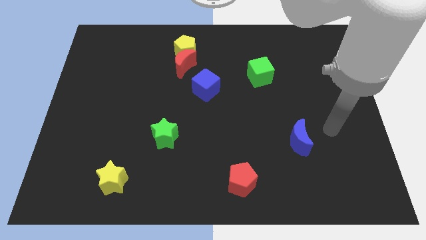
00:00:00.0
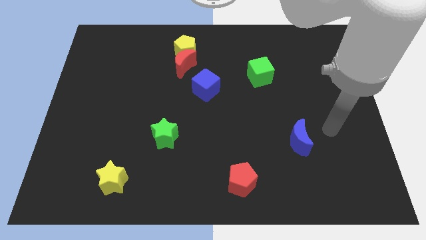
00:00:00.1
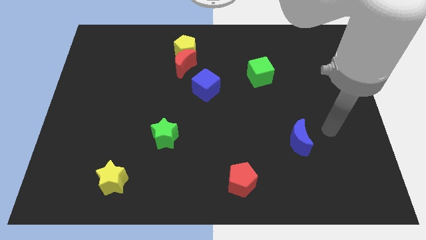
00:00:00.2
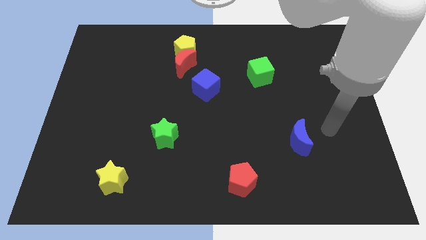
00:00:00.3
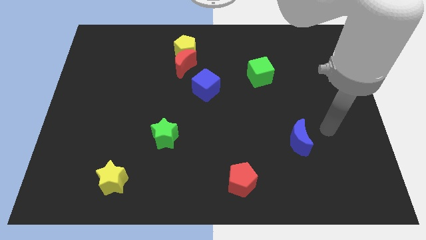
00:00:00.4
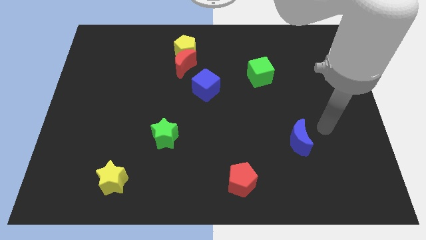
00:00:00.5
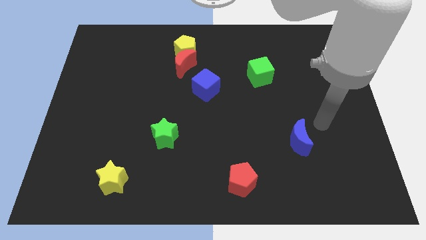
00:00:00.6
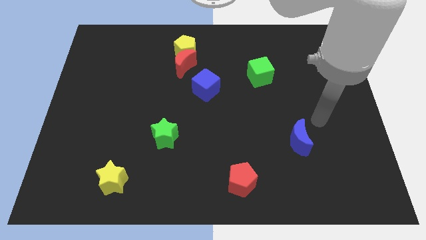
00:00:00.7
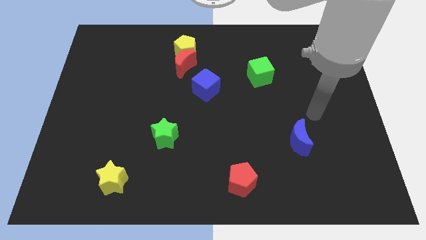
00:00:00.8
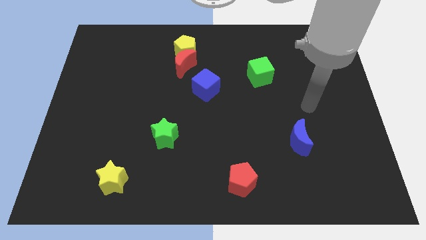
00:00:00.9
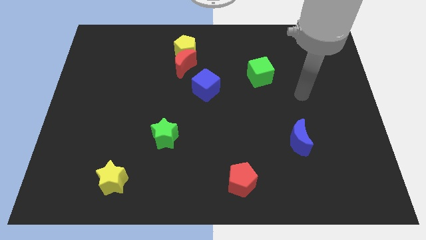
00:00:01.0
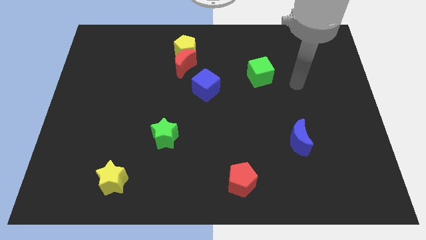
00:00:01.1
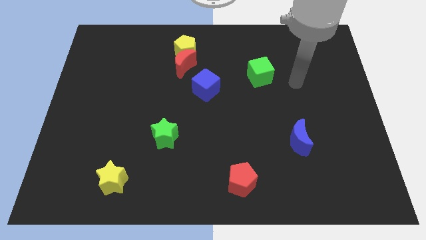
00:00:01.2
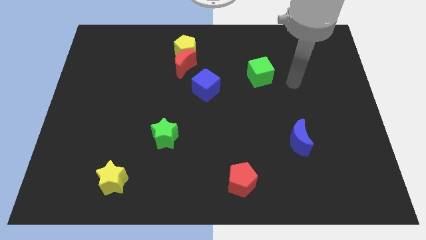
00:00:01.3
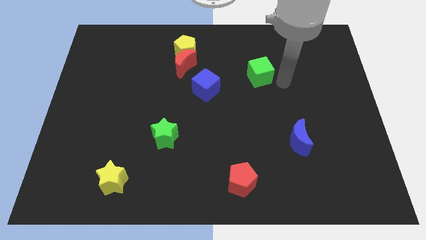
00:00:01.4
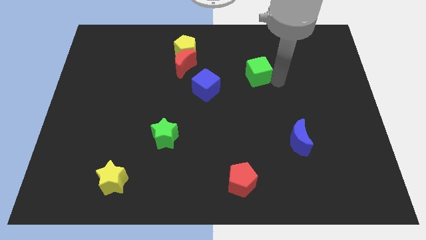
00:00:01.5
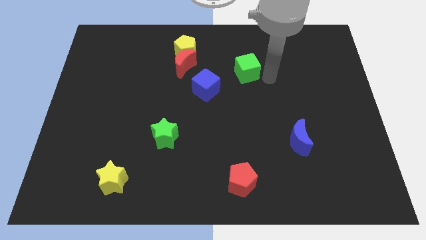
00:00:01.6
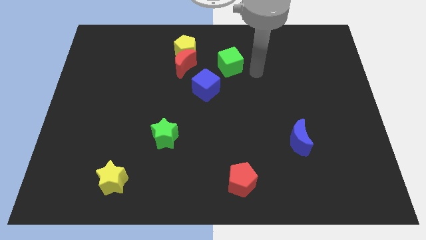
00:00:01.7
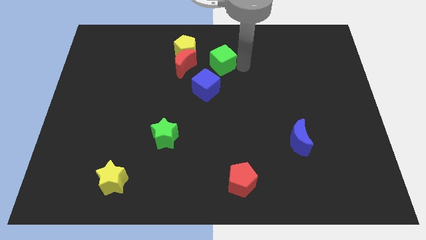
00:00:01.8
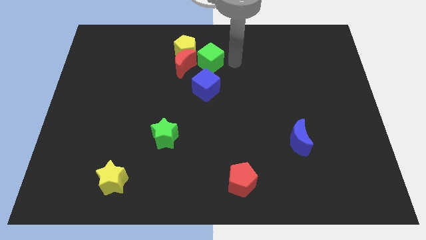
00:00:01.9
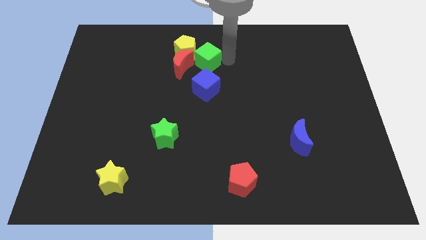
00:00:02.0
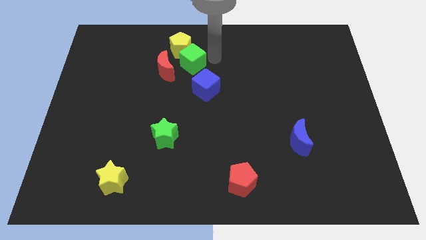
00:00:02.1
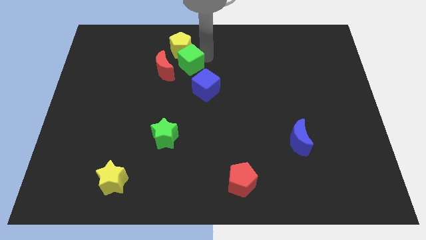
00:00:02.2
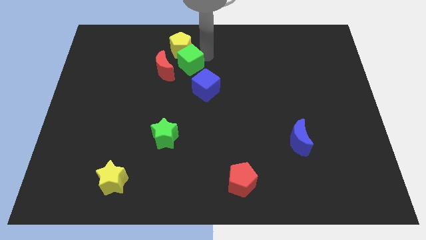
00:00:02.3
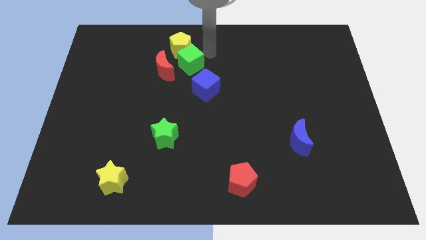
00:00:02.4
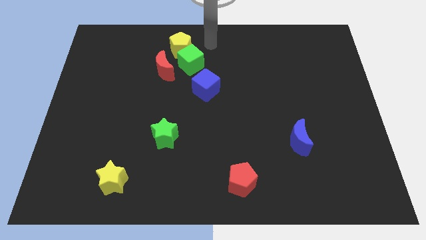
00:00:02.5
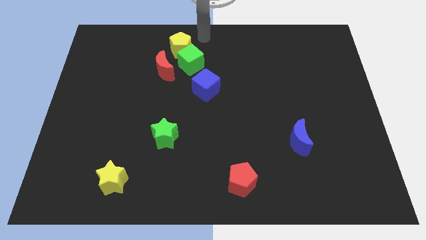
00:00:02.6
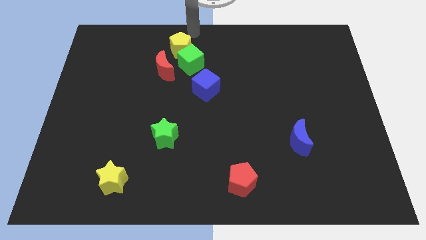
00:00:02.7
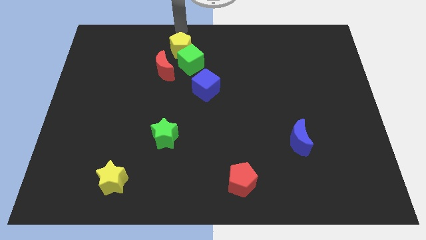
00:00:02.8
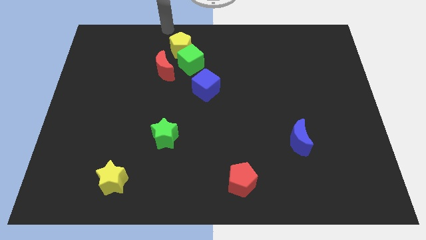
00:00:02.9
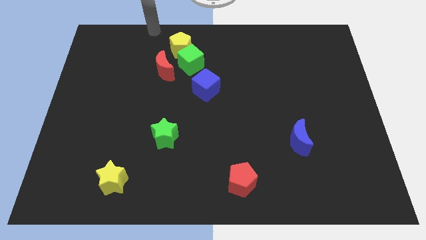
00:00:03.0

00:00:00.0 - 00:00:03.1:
place the green cube to the bottom of the yellow pentagon

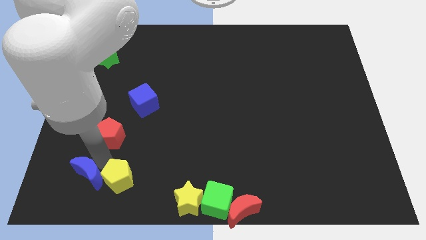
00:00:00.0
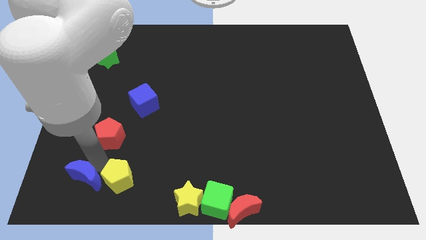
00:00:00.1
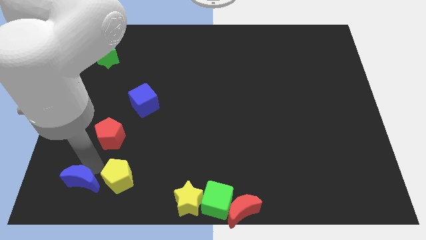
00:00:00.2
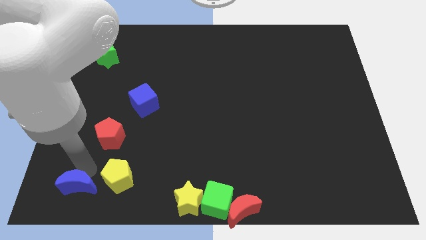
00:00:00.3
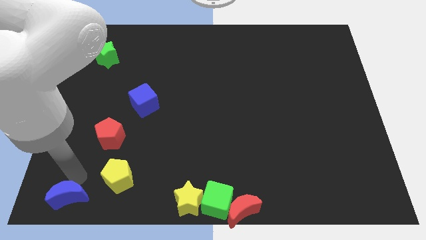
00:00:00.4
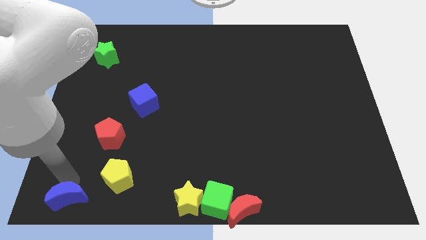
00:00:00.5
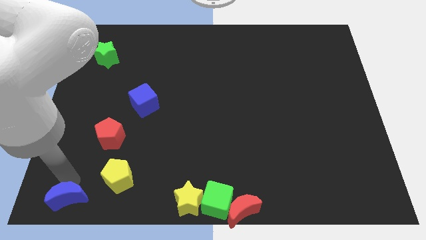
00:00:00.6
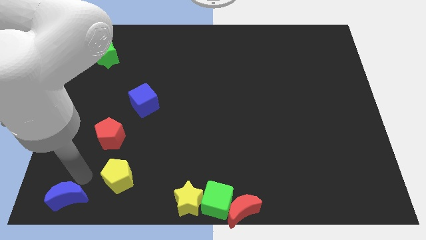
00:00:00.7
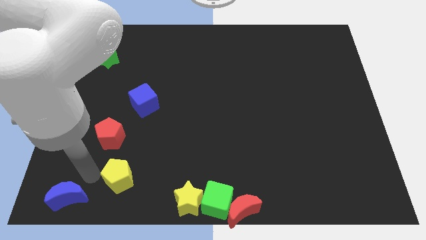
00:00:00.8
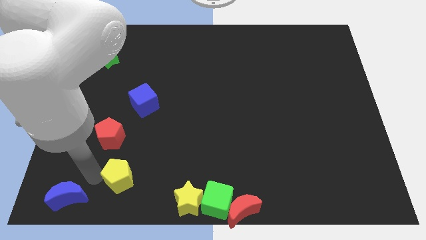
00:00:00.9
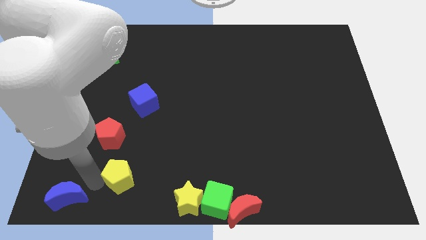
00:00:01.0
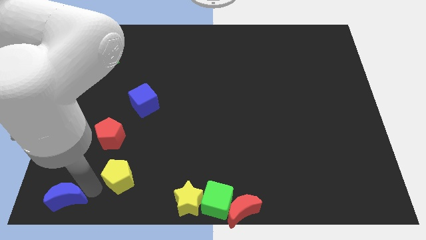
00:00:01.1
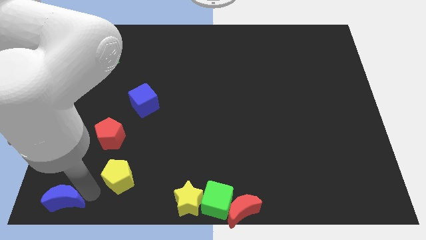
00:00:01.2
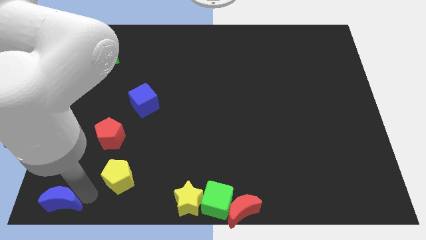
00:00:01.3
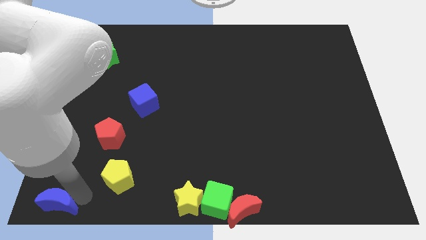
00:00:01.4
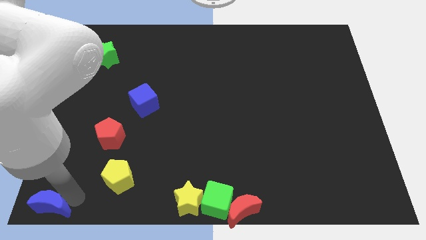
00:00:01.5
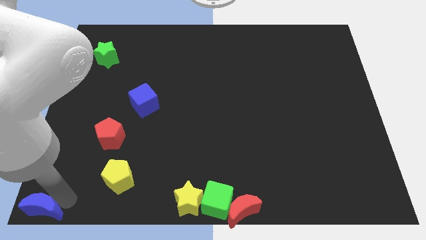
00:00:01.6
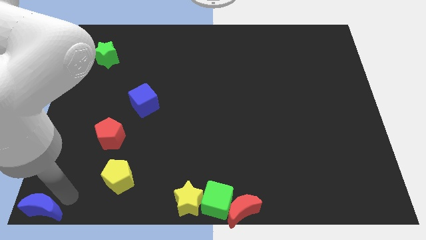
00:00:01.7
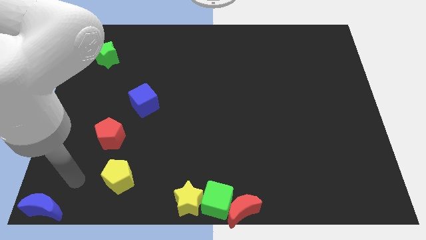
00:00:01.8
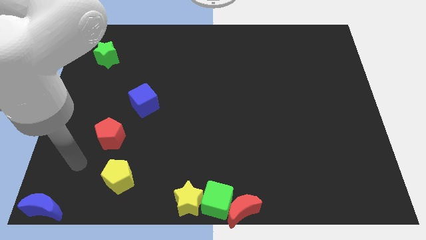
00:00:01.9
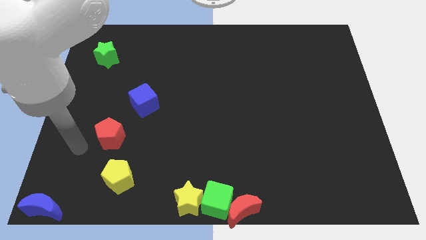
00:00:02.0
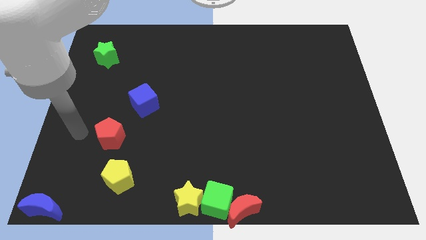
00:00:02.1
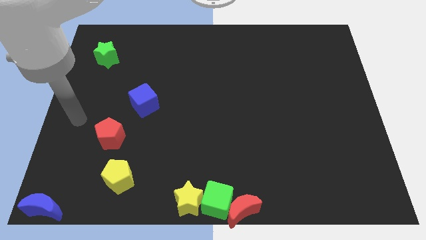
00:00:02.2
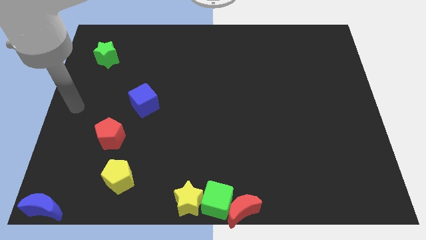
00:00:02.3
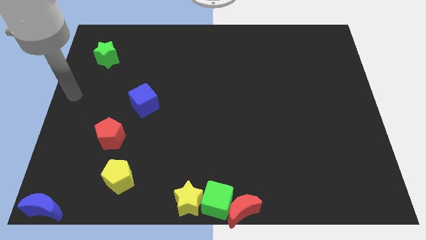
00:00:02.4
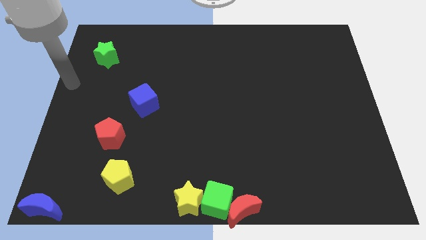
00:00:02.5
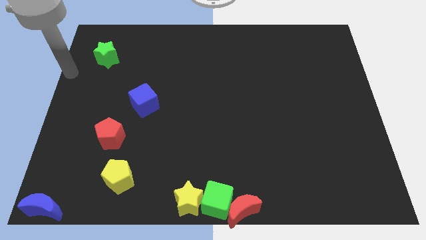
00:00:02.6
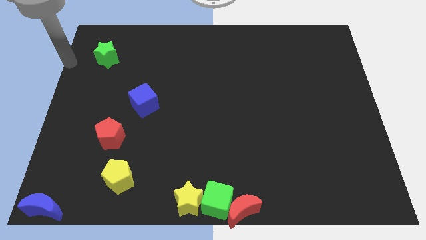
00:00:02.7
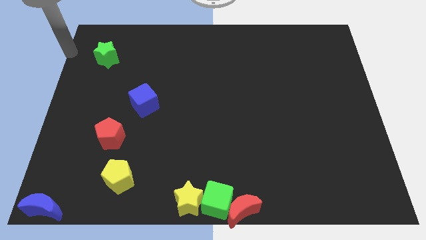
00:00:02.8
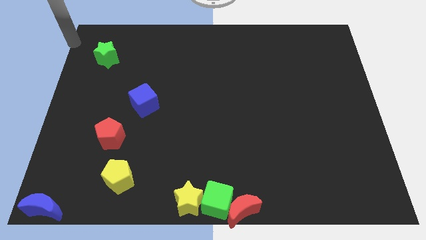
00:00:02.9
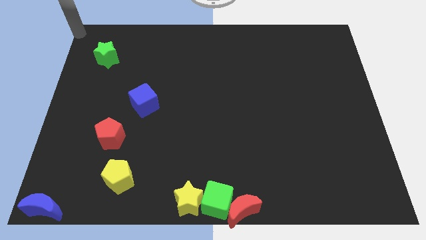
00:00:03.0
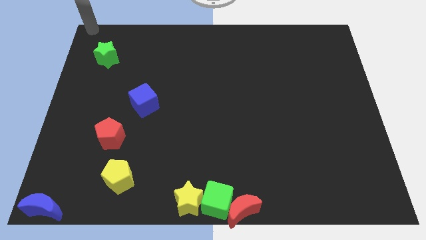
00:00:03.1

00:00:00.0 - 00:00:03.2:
push the blue crescent to the bottom left of the board

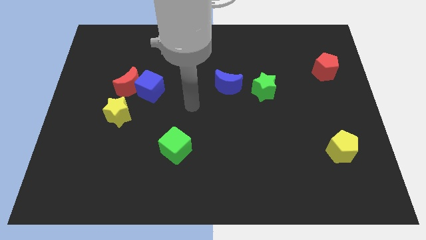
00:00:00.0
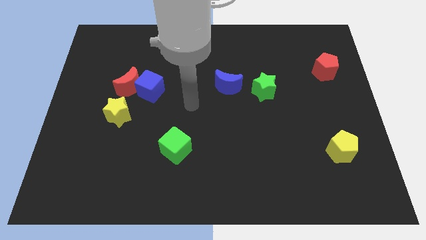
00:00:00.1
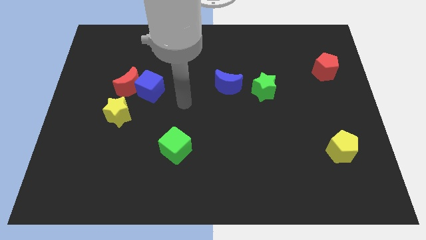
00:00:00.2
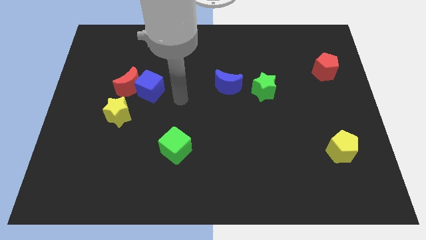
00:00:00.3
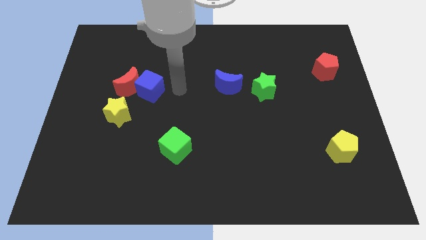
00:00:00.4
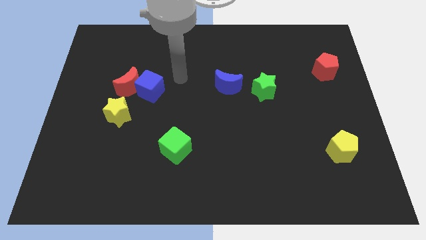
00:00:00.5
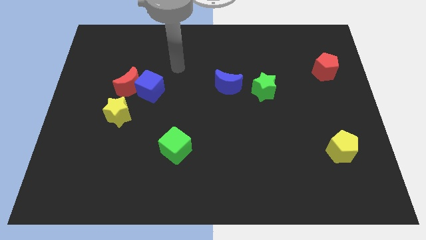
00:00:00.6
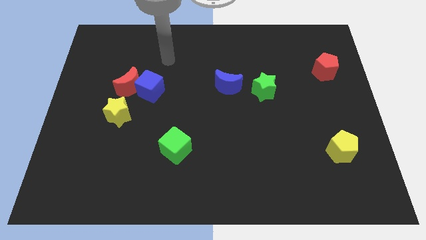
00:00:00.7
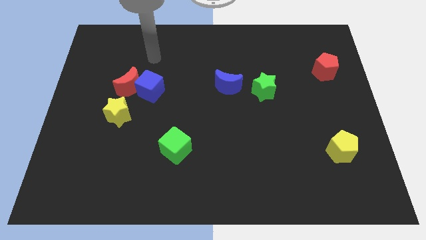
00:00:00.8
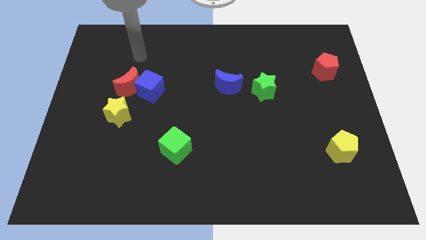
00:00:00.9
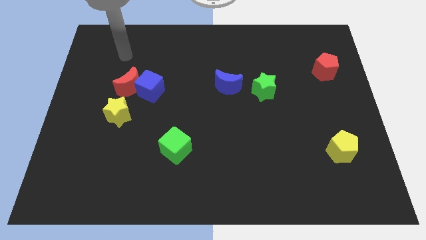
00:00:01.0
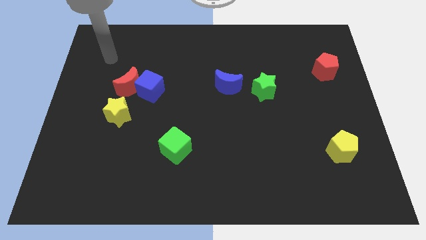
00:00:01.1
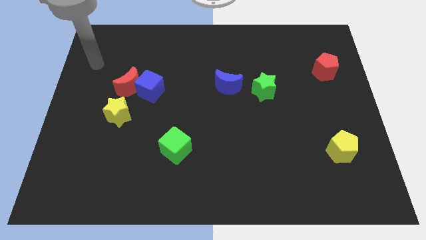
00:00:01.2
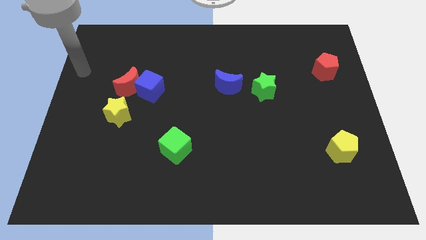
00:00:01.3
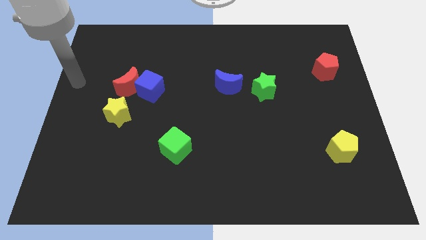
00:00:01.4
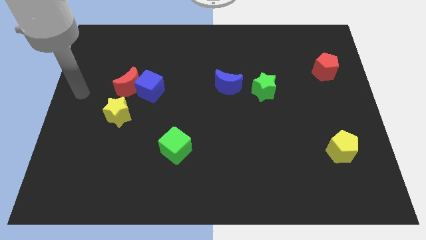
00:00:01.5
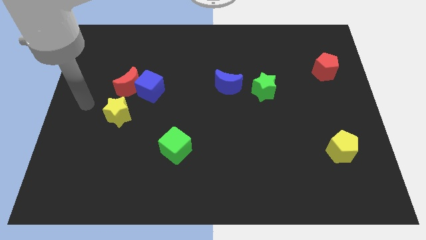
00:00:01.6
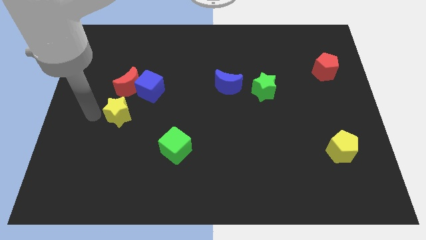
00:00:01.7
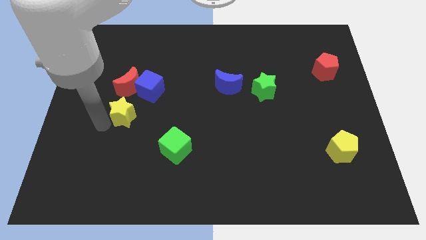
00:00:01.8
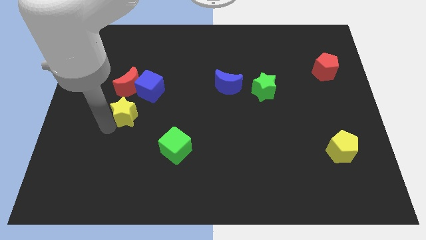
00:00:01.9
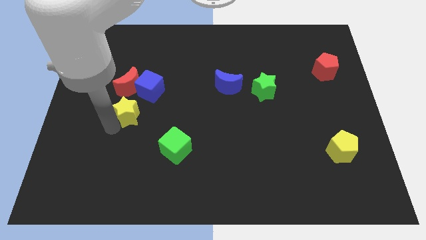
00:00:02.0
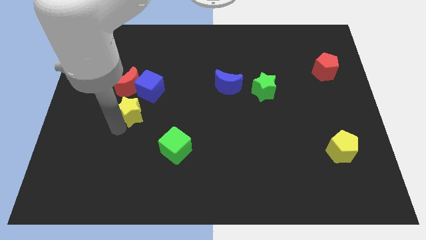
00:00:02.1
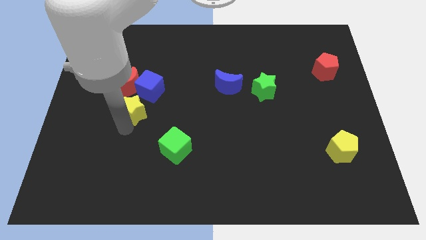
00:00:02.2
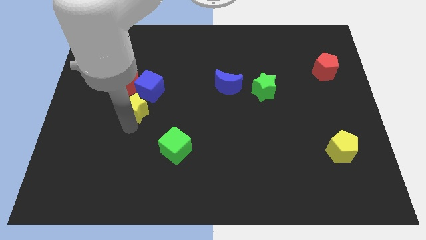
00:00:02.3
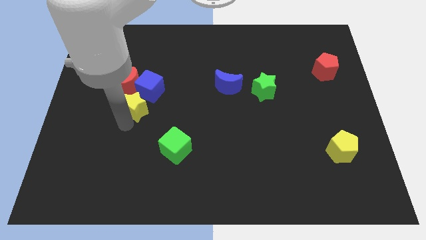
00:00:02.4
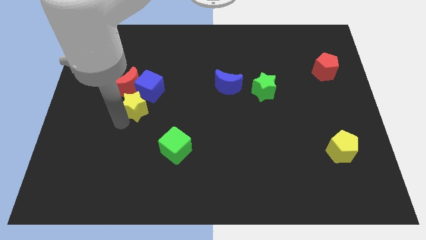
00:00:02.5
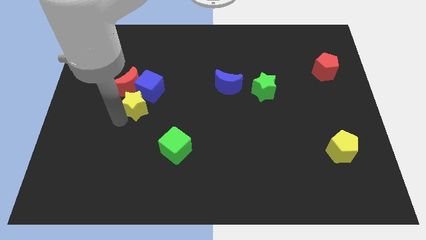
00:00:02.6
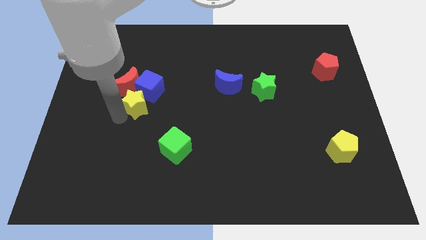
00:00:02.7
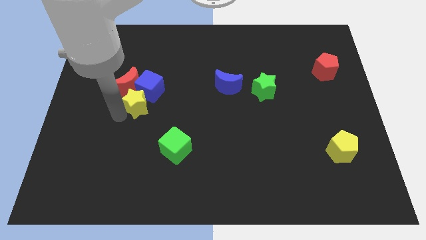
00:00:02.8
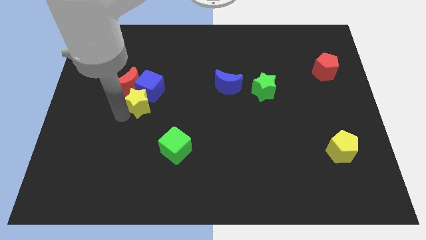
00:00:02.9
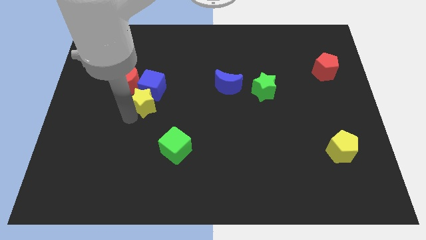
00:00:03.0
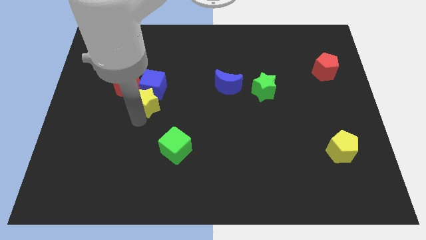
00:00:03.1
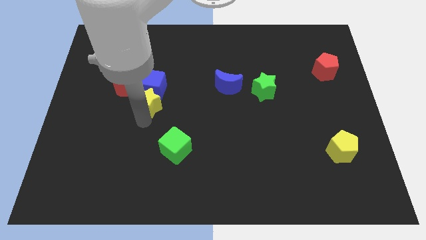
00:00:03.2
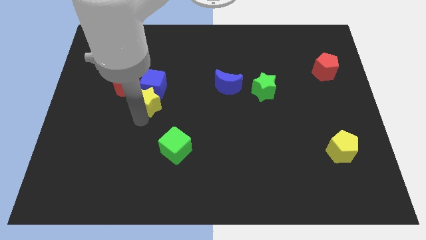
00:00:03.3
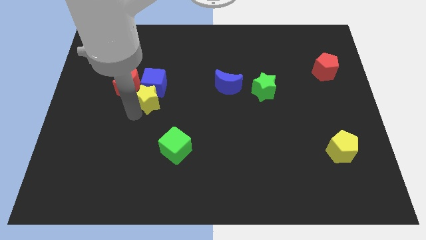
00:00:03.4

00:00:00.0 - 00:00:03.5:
move the yellow star into the blue cube
